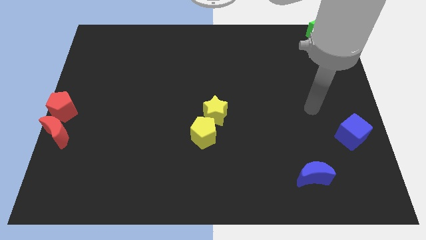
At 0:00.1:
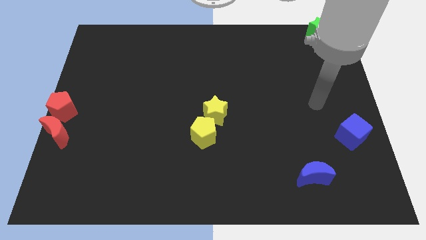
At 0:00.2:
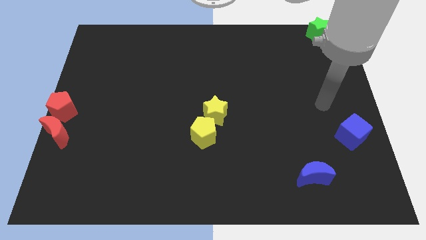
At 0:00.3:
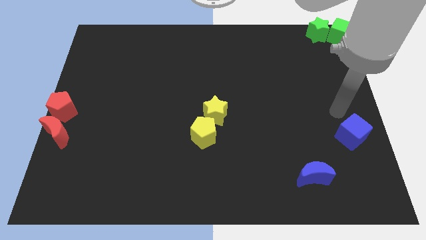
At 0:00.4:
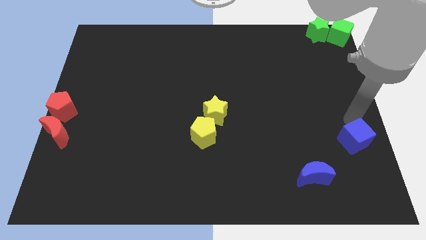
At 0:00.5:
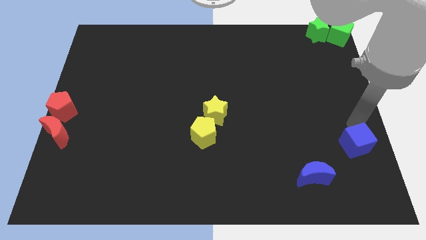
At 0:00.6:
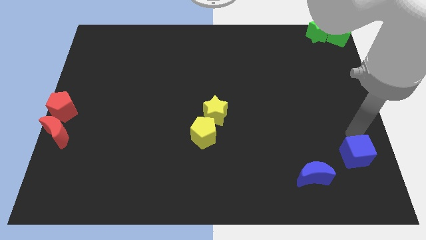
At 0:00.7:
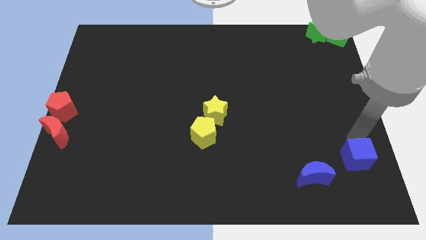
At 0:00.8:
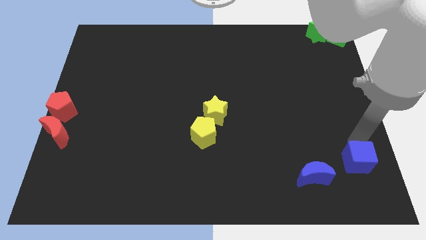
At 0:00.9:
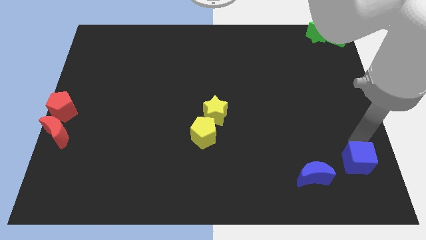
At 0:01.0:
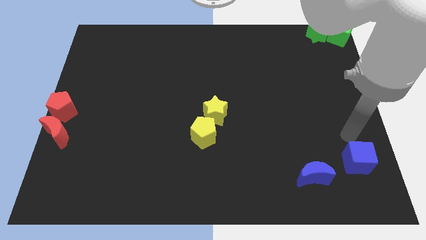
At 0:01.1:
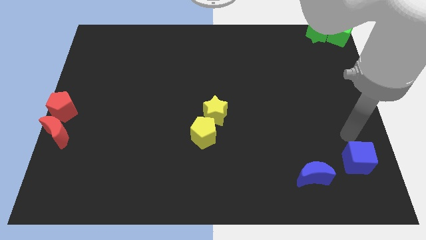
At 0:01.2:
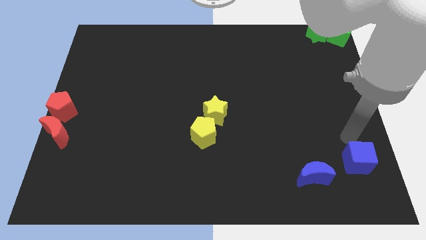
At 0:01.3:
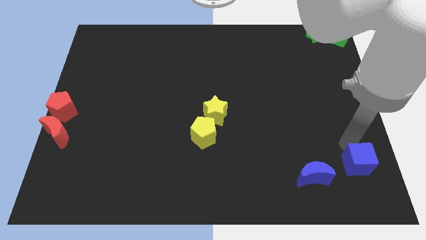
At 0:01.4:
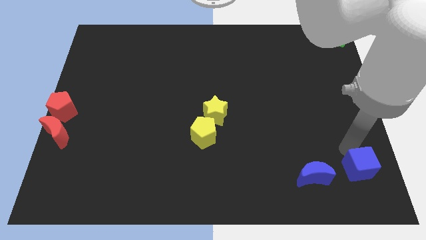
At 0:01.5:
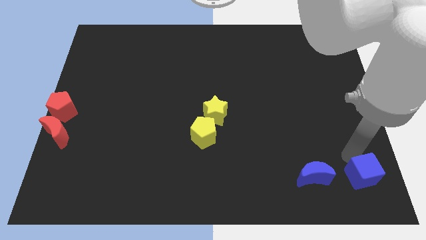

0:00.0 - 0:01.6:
move the blue cube to the right of the blue moon

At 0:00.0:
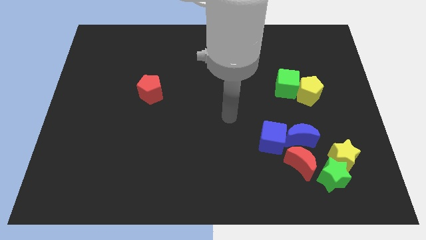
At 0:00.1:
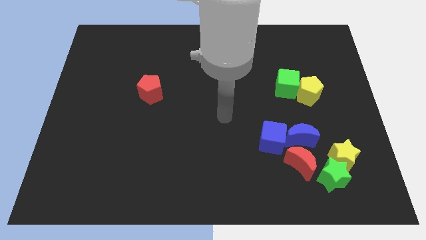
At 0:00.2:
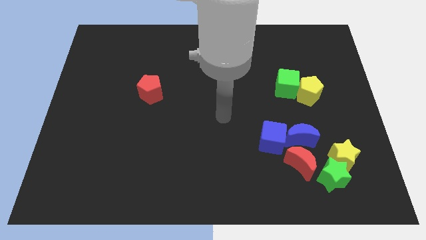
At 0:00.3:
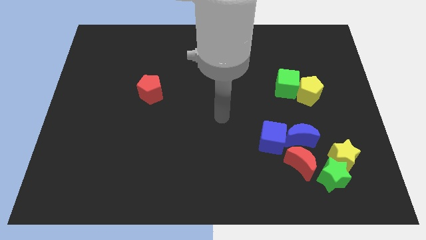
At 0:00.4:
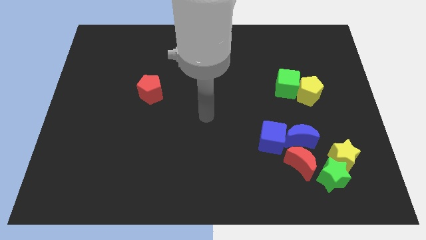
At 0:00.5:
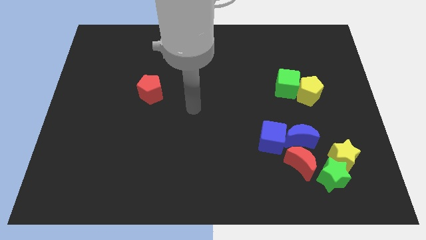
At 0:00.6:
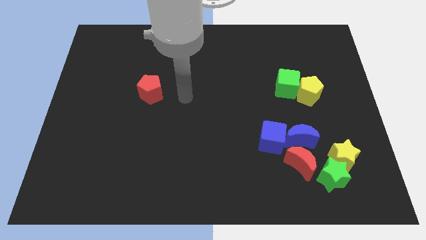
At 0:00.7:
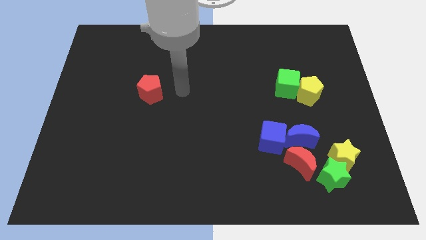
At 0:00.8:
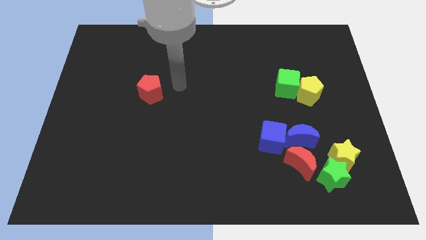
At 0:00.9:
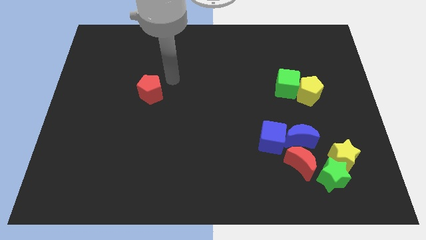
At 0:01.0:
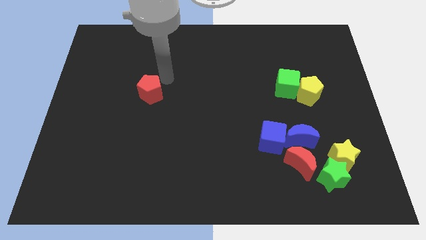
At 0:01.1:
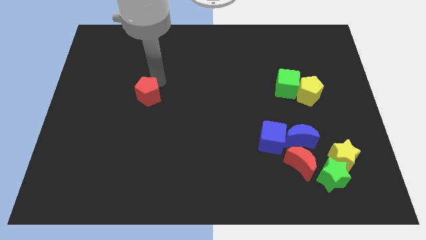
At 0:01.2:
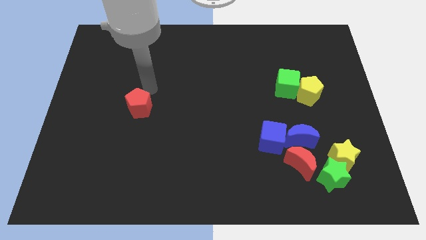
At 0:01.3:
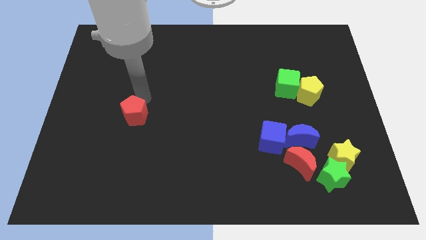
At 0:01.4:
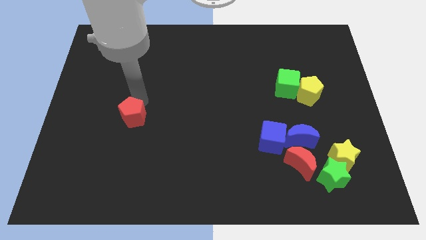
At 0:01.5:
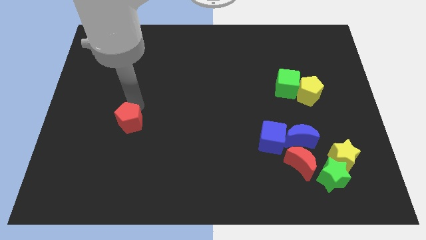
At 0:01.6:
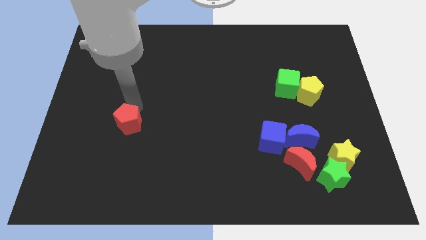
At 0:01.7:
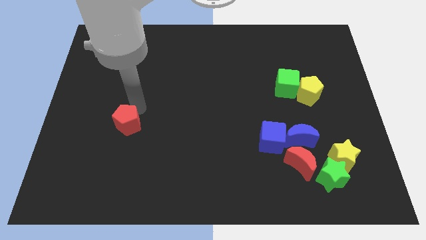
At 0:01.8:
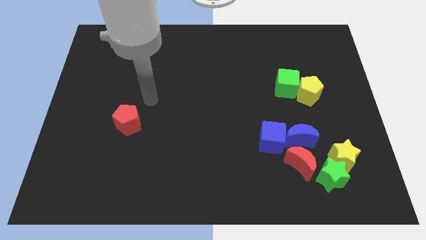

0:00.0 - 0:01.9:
slightly push the red pentagon downwards

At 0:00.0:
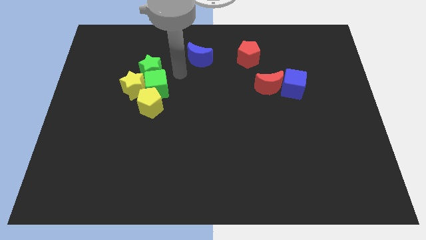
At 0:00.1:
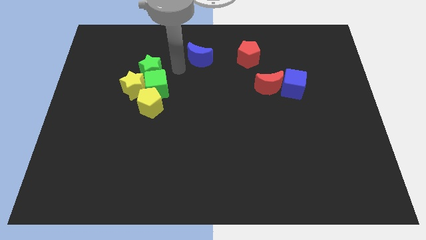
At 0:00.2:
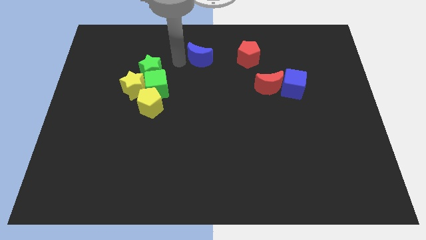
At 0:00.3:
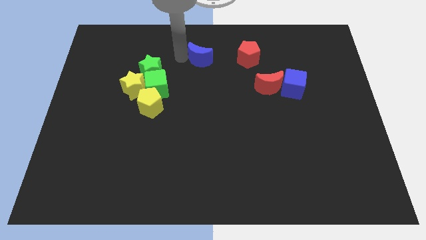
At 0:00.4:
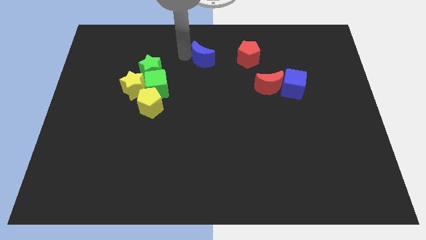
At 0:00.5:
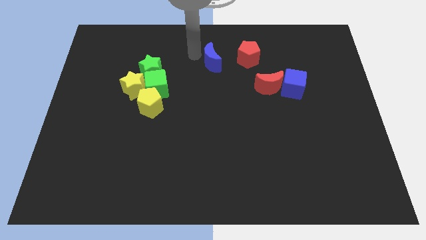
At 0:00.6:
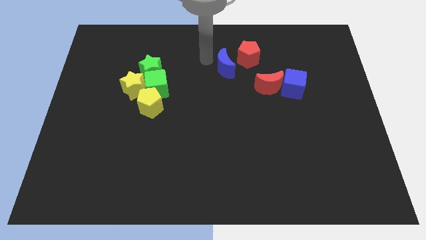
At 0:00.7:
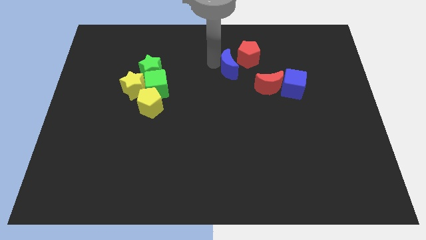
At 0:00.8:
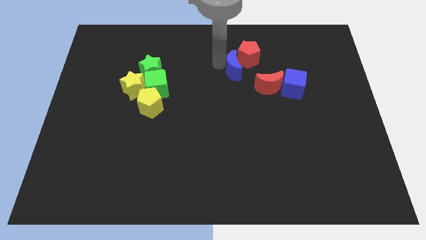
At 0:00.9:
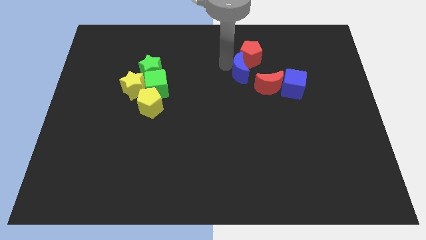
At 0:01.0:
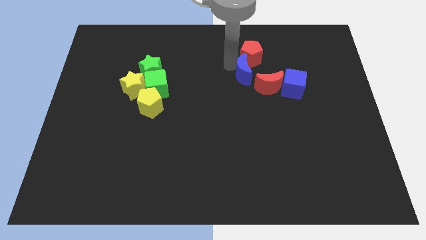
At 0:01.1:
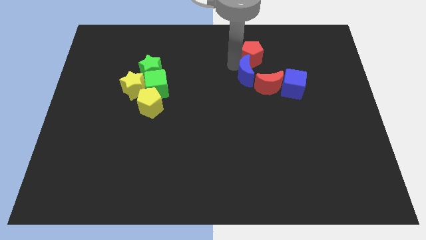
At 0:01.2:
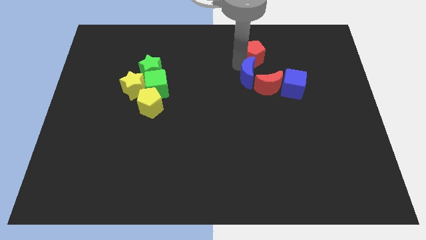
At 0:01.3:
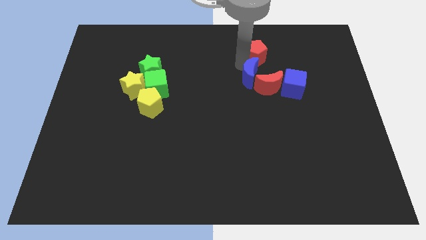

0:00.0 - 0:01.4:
move blue moon to the left of red moon

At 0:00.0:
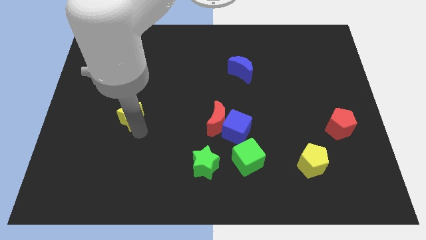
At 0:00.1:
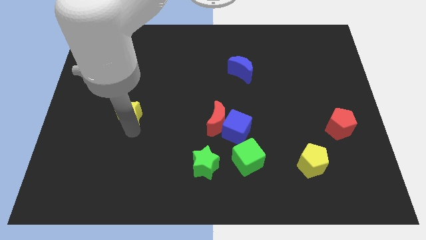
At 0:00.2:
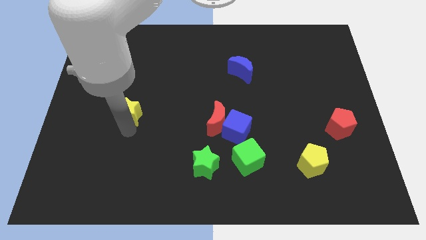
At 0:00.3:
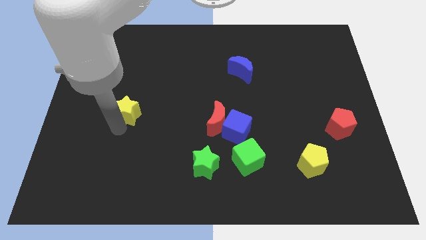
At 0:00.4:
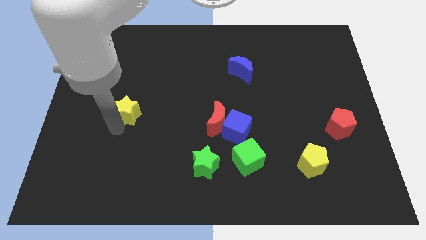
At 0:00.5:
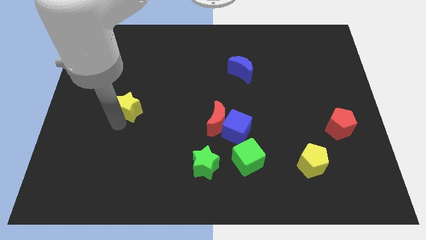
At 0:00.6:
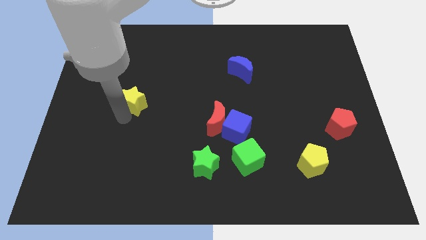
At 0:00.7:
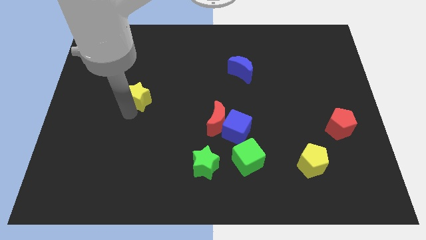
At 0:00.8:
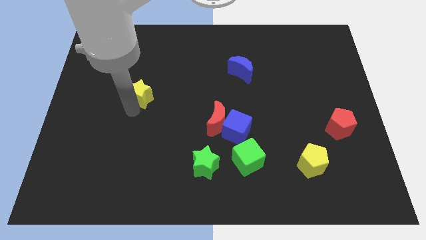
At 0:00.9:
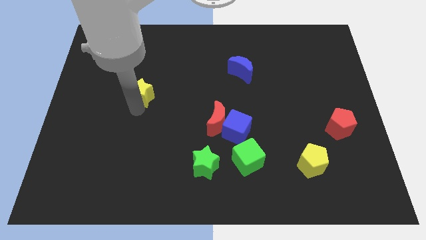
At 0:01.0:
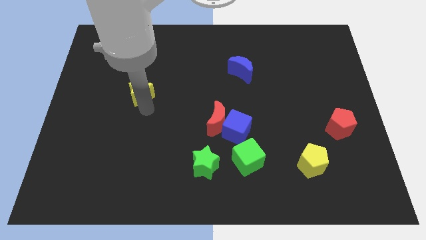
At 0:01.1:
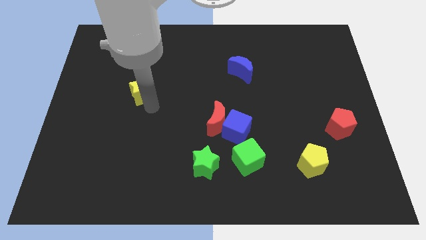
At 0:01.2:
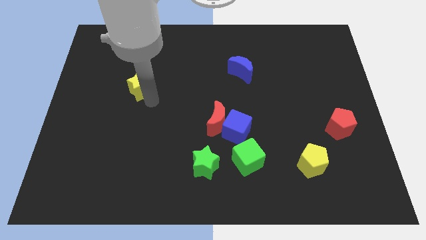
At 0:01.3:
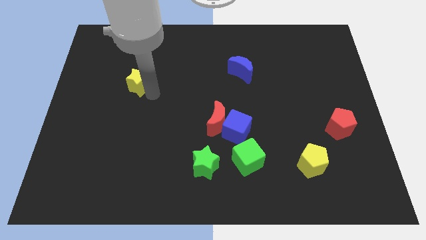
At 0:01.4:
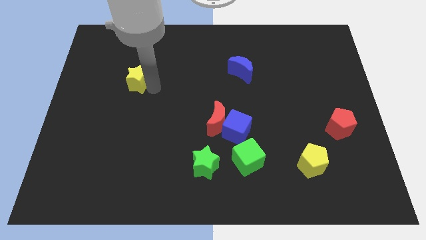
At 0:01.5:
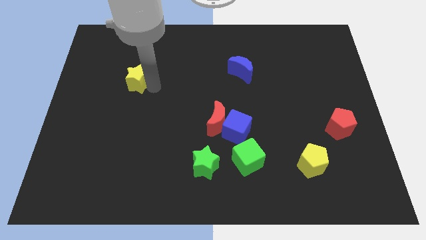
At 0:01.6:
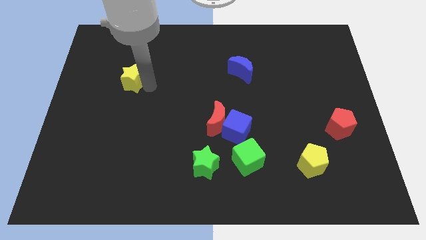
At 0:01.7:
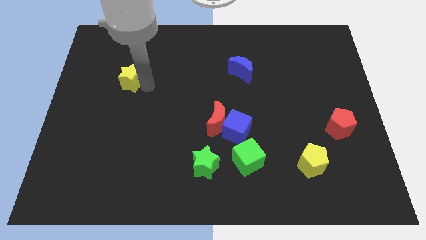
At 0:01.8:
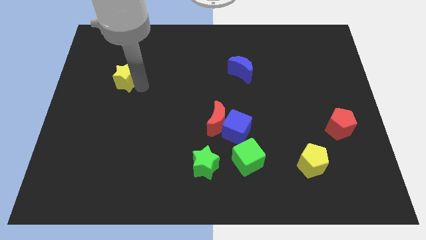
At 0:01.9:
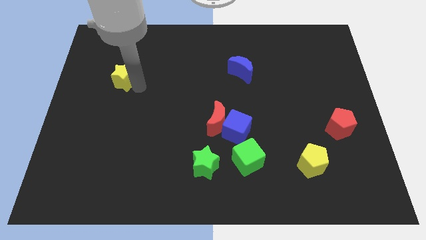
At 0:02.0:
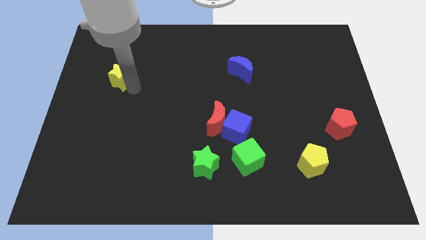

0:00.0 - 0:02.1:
push the yellow star towards the top left of the board

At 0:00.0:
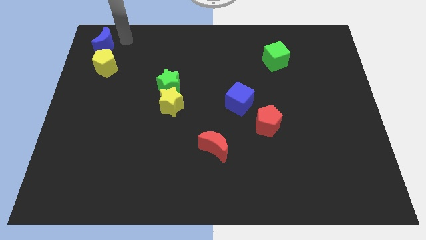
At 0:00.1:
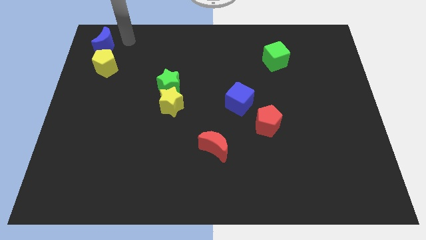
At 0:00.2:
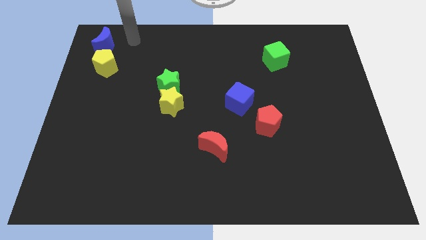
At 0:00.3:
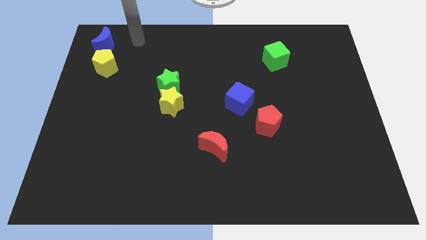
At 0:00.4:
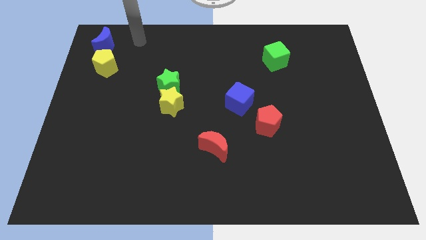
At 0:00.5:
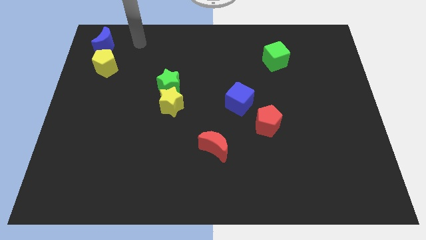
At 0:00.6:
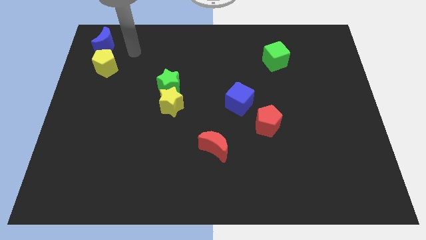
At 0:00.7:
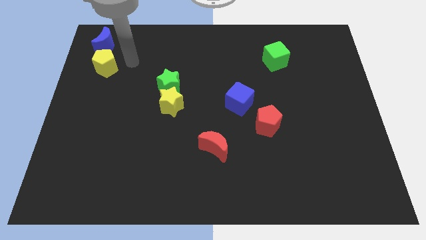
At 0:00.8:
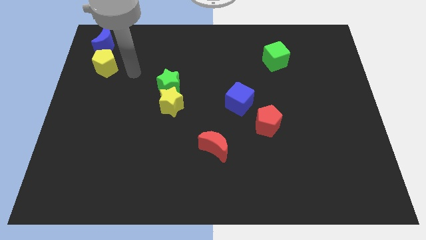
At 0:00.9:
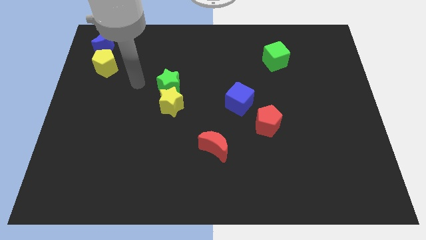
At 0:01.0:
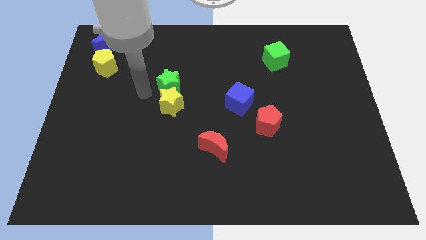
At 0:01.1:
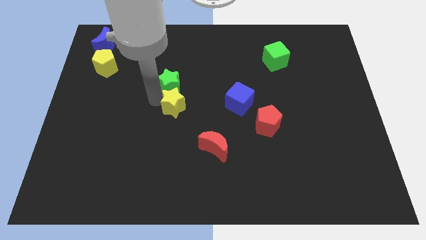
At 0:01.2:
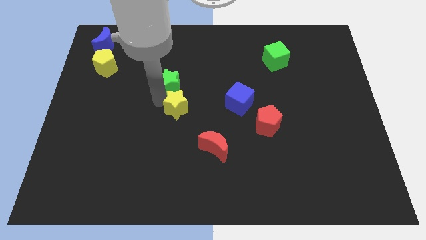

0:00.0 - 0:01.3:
touch the yellow star on the left side

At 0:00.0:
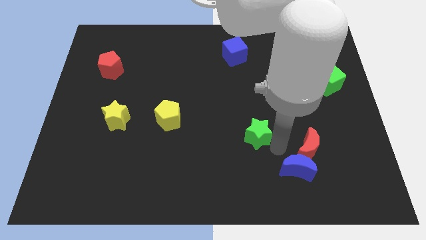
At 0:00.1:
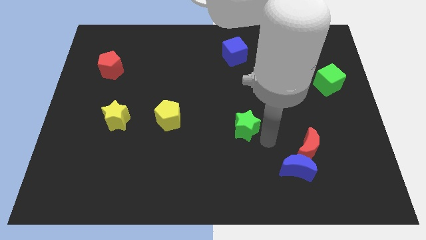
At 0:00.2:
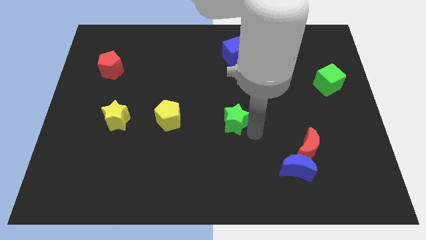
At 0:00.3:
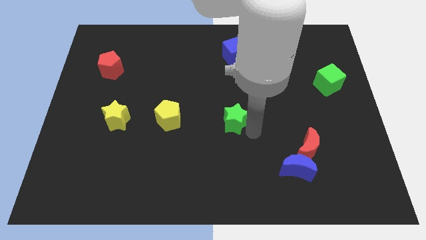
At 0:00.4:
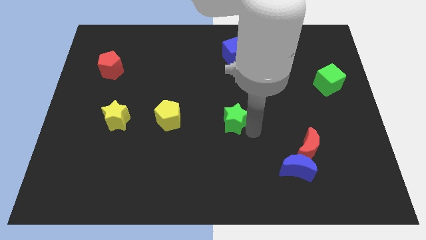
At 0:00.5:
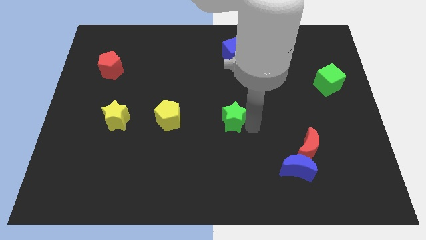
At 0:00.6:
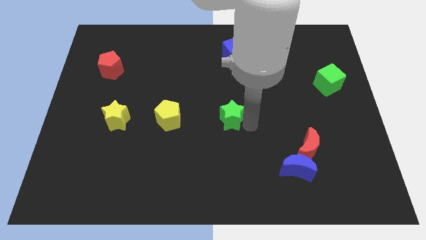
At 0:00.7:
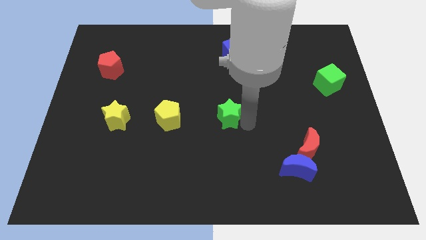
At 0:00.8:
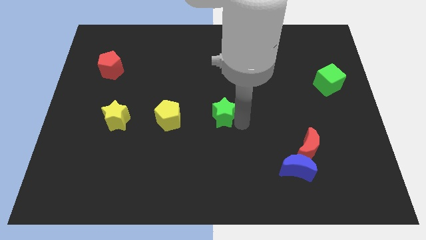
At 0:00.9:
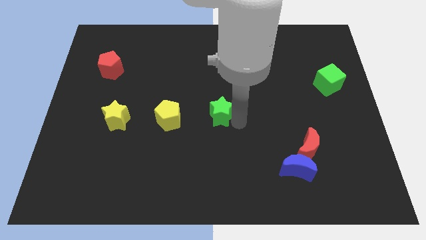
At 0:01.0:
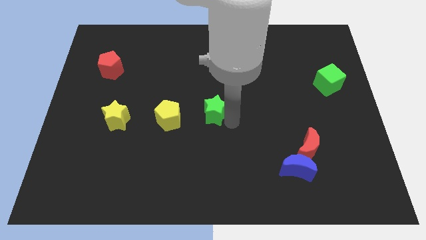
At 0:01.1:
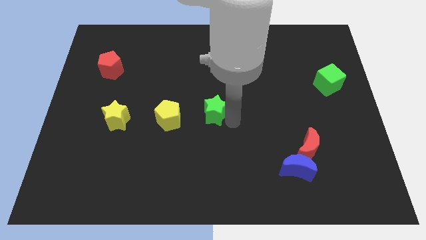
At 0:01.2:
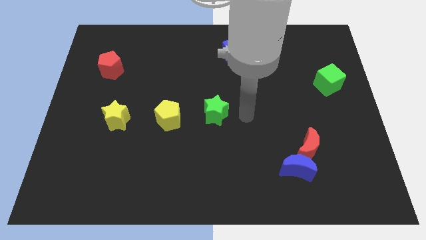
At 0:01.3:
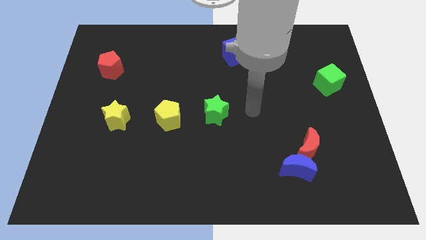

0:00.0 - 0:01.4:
move the green star towards the yellow pentagon
